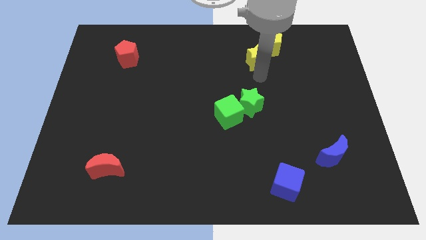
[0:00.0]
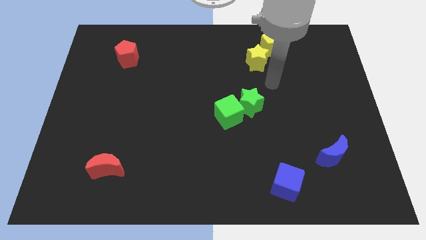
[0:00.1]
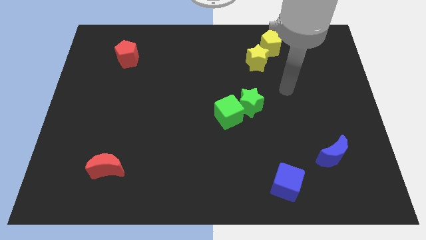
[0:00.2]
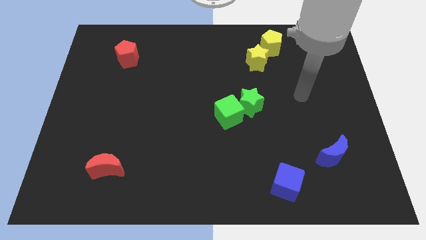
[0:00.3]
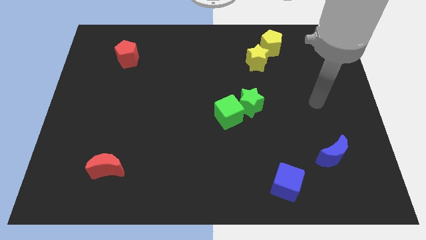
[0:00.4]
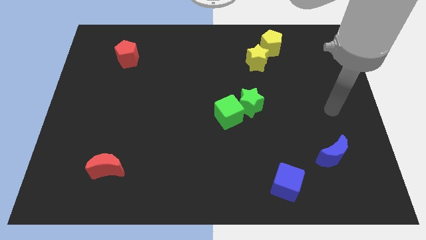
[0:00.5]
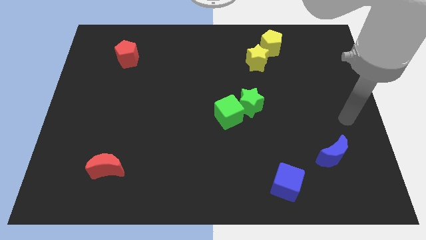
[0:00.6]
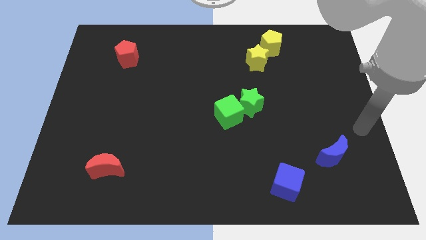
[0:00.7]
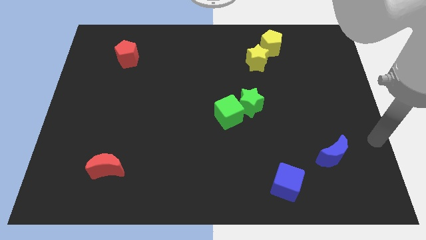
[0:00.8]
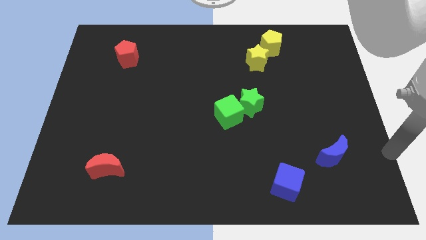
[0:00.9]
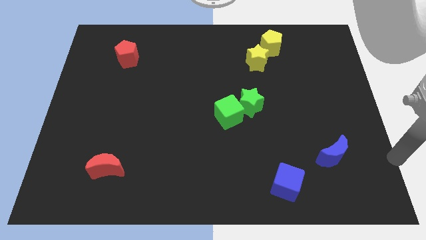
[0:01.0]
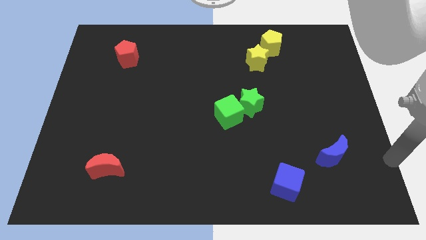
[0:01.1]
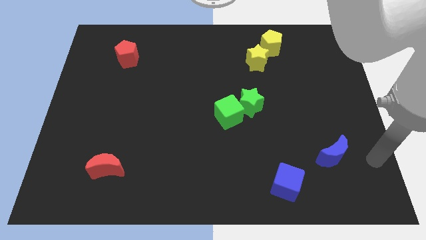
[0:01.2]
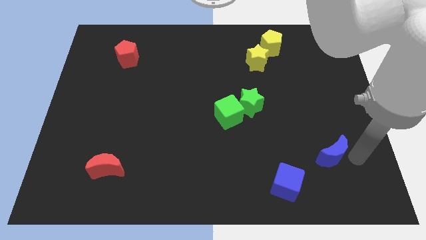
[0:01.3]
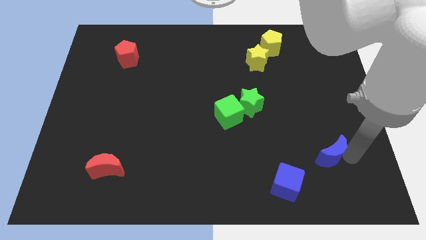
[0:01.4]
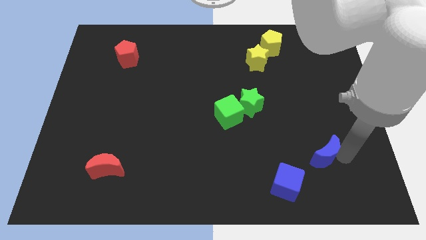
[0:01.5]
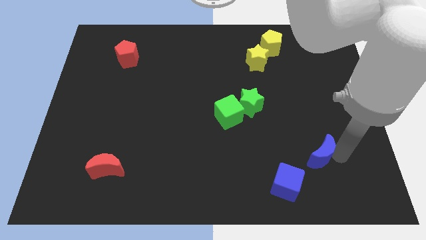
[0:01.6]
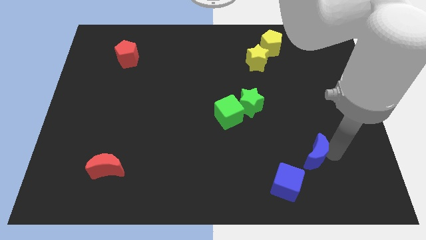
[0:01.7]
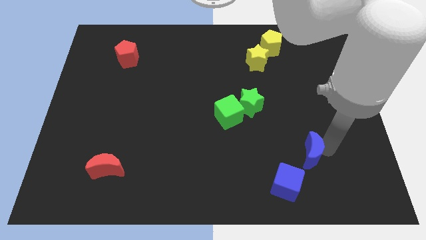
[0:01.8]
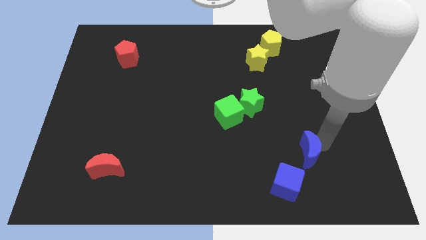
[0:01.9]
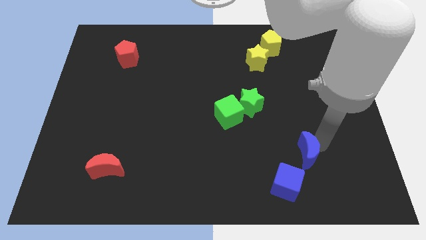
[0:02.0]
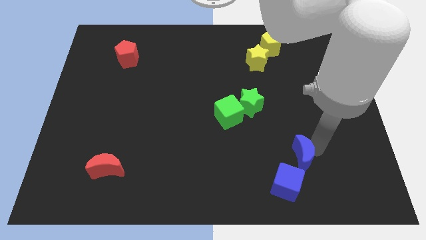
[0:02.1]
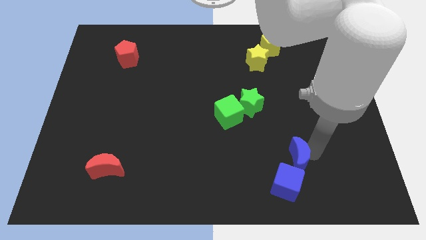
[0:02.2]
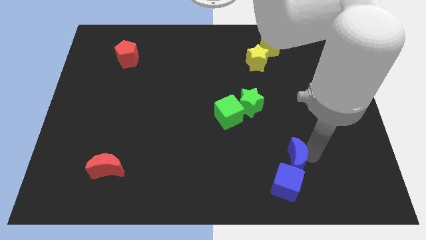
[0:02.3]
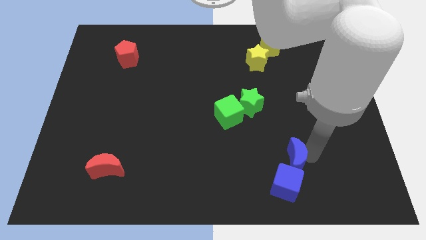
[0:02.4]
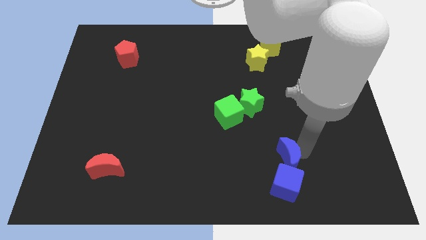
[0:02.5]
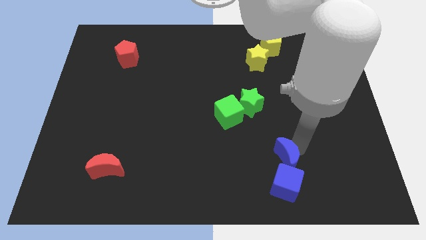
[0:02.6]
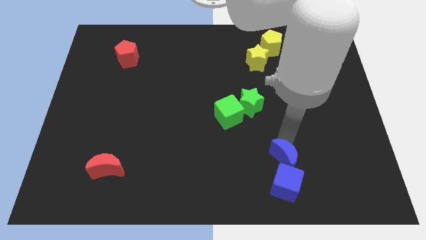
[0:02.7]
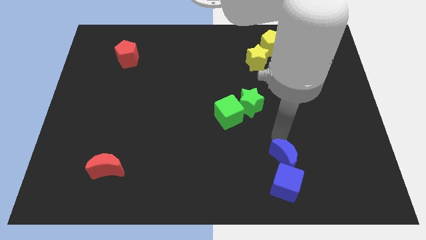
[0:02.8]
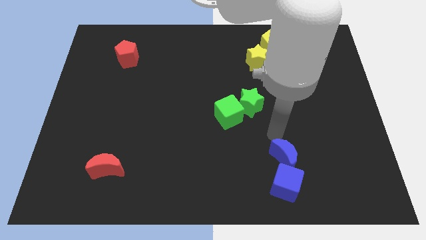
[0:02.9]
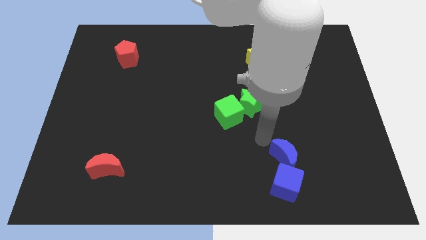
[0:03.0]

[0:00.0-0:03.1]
push the blue crescent into the top side of the blue cube

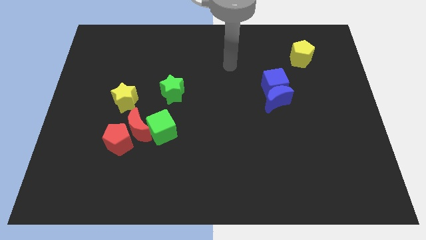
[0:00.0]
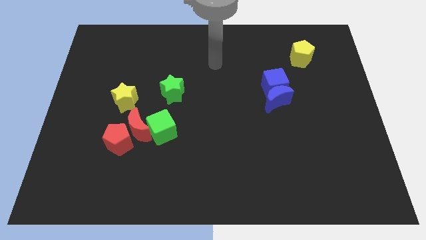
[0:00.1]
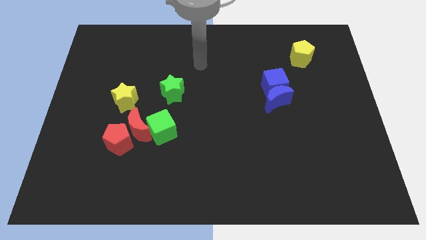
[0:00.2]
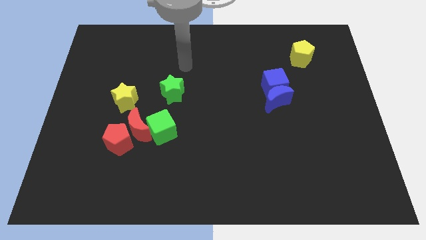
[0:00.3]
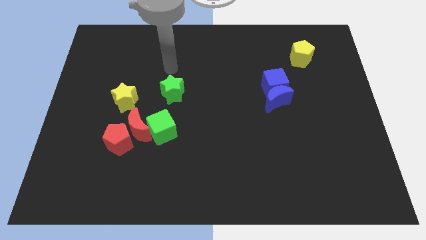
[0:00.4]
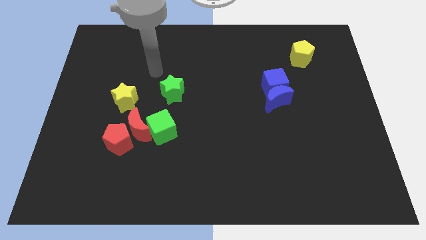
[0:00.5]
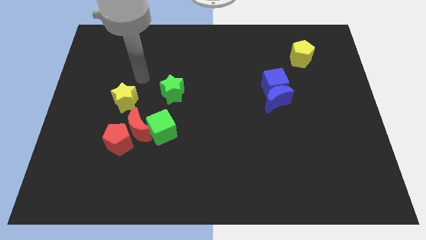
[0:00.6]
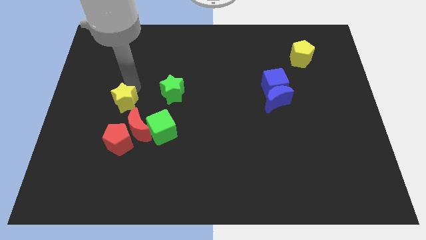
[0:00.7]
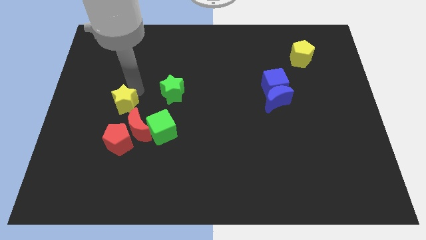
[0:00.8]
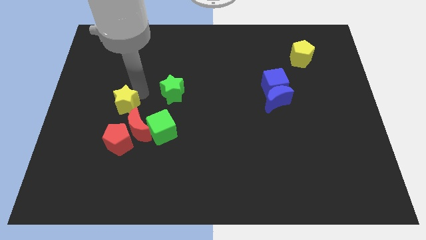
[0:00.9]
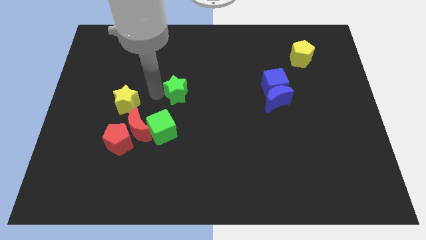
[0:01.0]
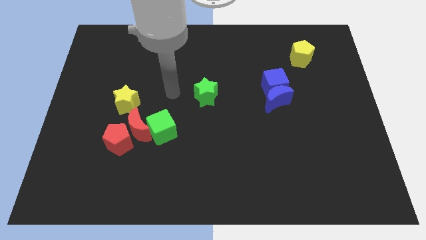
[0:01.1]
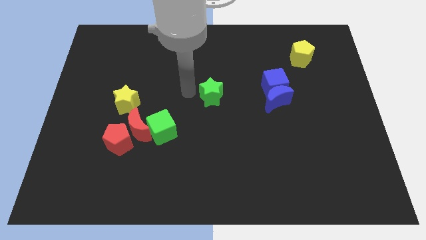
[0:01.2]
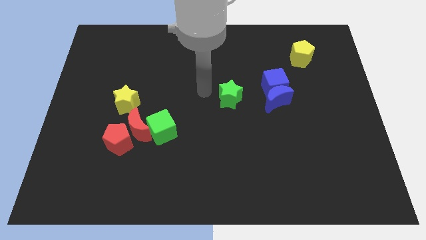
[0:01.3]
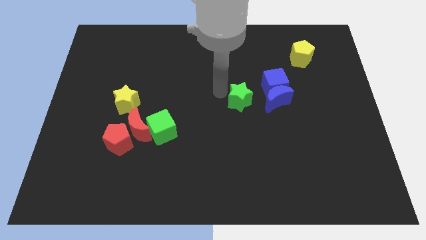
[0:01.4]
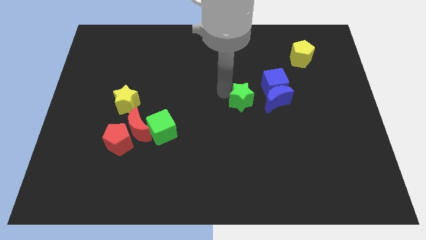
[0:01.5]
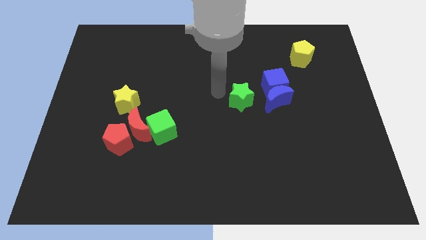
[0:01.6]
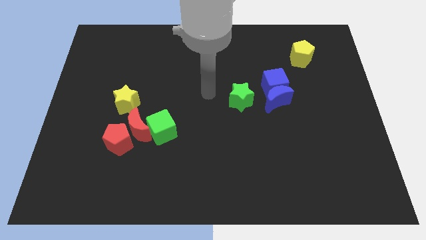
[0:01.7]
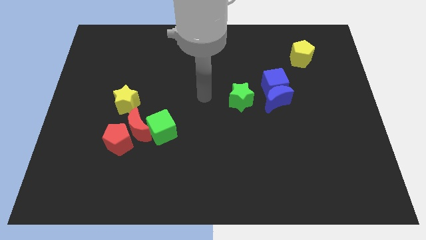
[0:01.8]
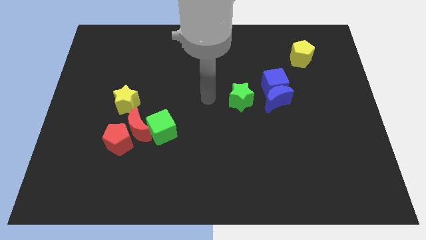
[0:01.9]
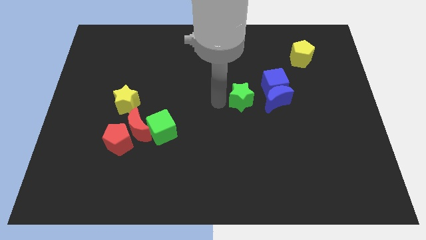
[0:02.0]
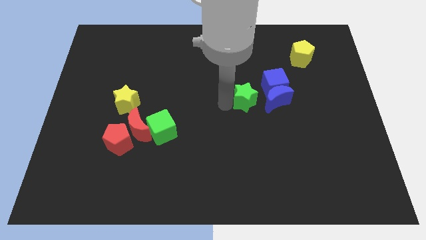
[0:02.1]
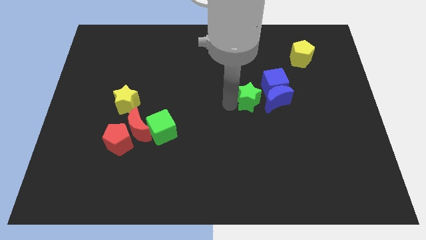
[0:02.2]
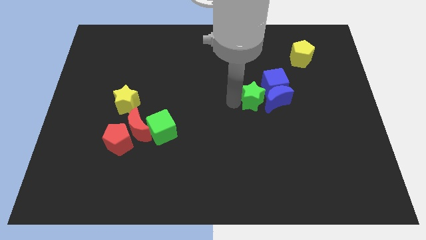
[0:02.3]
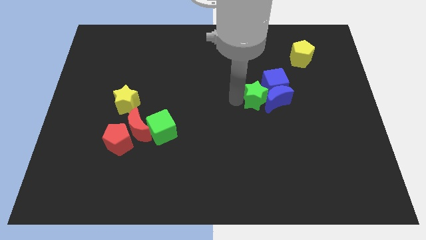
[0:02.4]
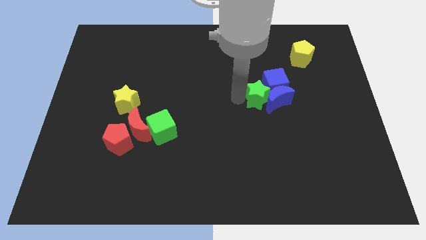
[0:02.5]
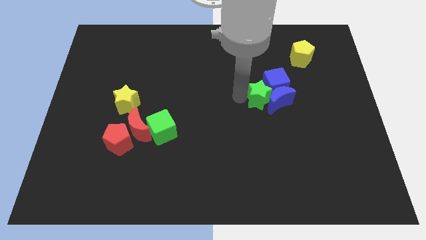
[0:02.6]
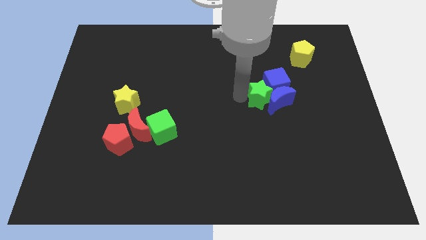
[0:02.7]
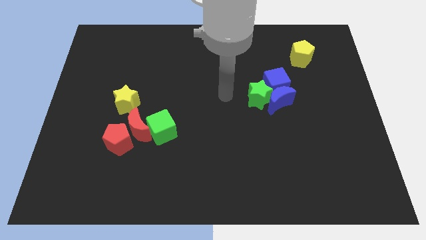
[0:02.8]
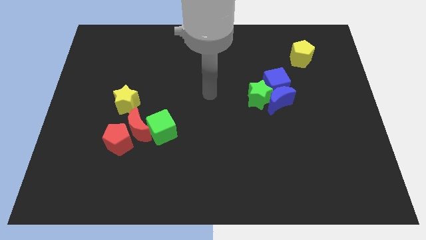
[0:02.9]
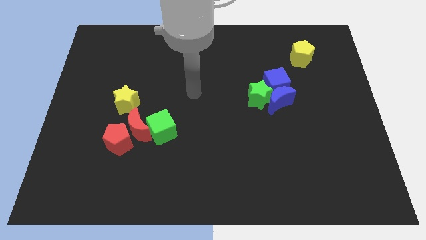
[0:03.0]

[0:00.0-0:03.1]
push the green star into blue cube and crescent

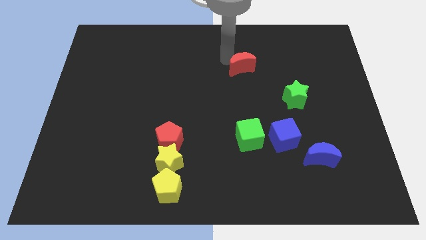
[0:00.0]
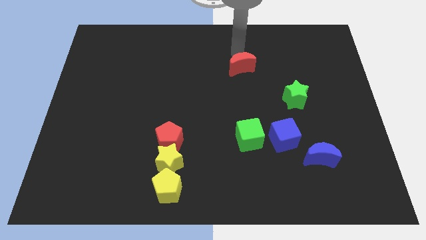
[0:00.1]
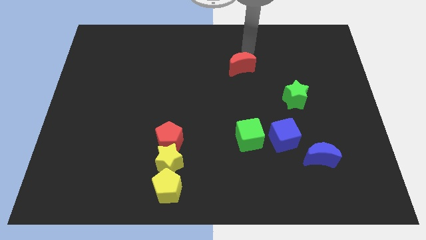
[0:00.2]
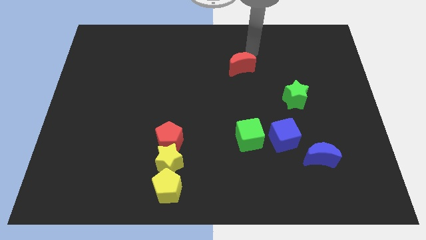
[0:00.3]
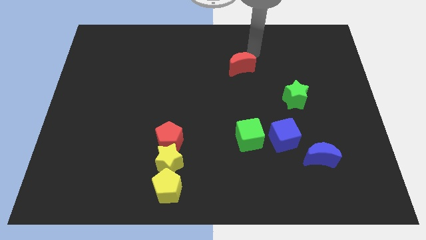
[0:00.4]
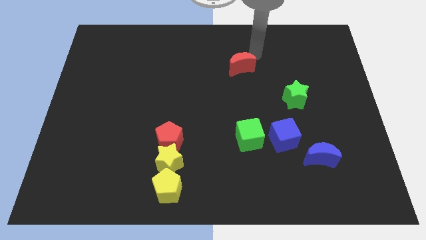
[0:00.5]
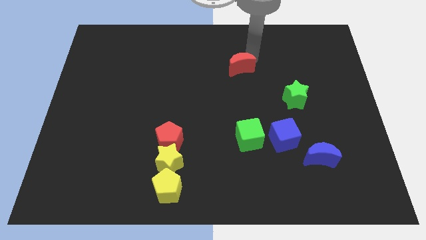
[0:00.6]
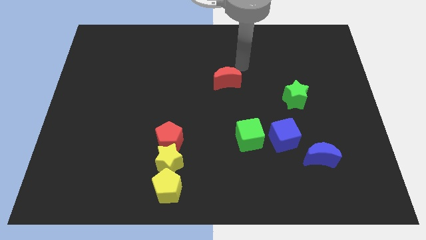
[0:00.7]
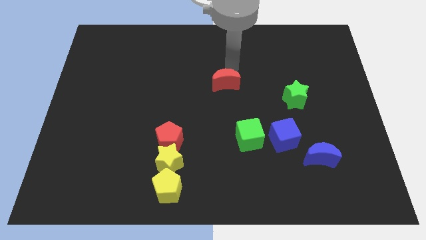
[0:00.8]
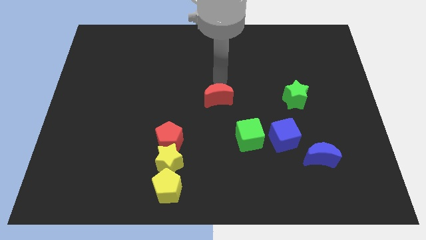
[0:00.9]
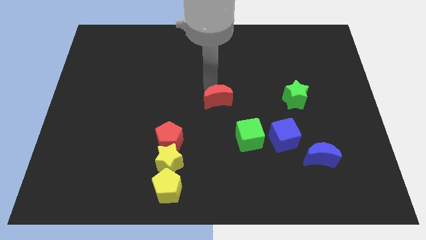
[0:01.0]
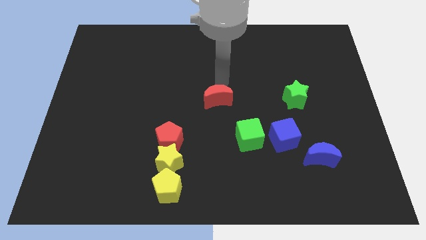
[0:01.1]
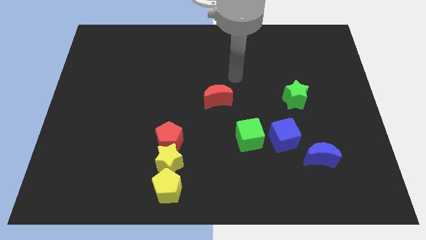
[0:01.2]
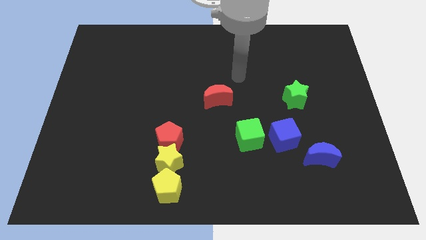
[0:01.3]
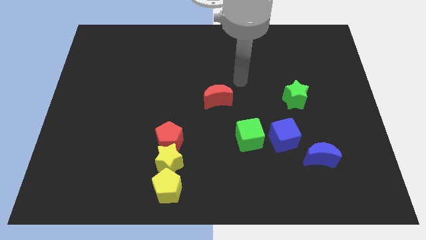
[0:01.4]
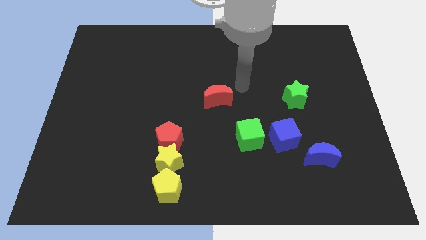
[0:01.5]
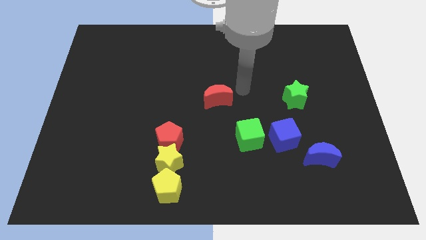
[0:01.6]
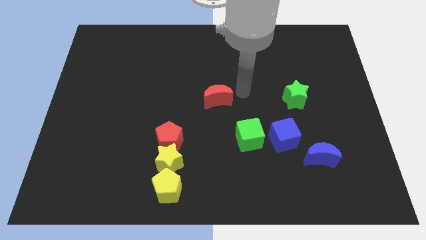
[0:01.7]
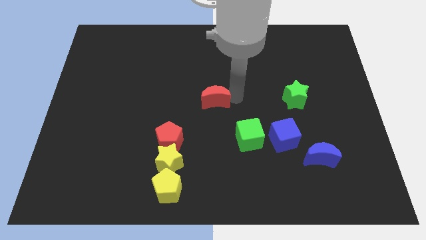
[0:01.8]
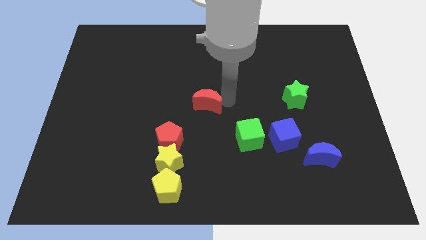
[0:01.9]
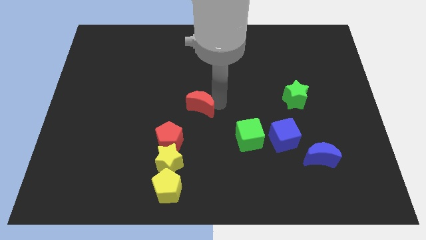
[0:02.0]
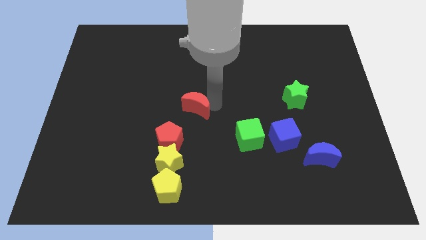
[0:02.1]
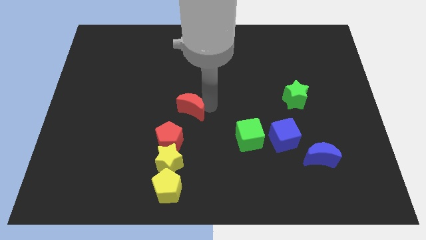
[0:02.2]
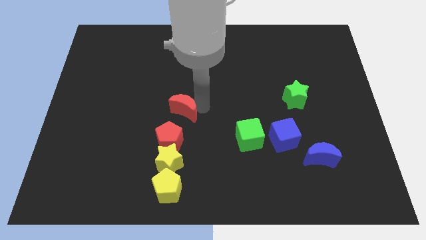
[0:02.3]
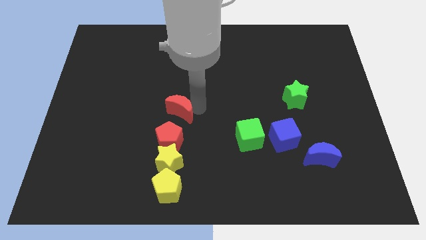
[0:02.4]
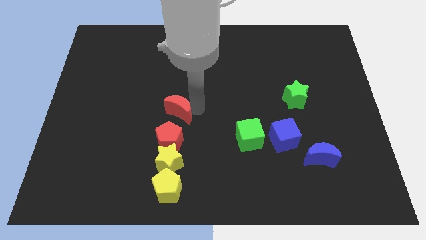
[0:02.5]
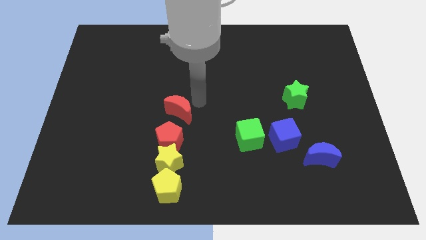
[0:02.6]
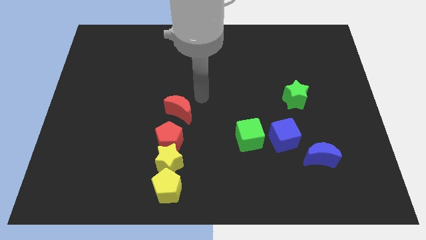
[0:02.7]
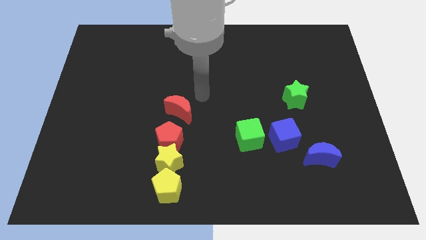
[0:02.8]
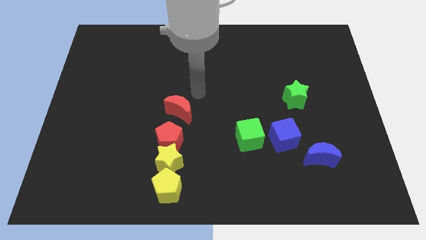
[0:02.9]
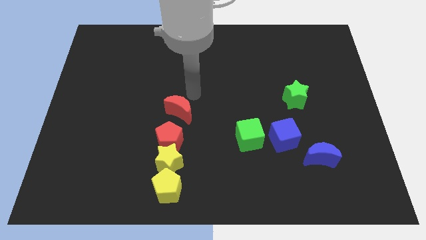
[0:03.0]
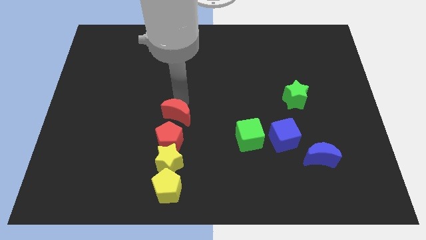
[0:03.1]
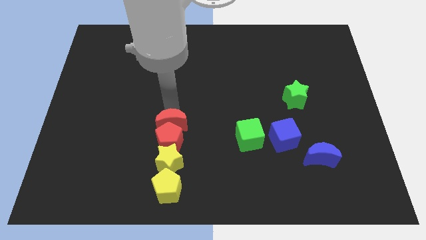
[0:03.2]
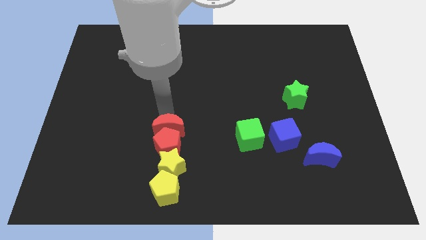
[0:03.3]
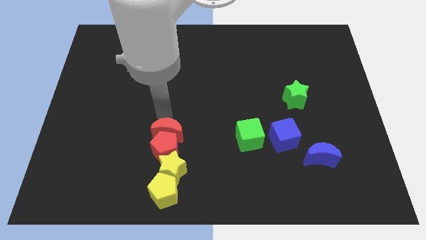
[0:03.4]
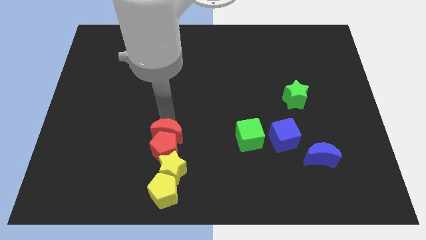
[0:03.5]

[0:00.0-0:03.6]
push the red moon into the group of blocks
